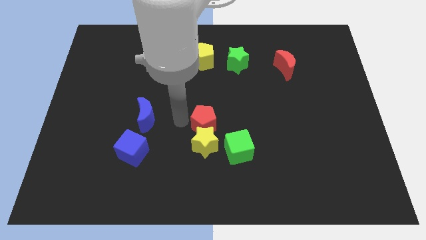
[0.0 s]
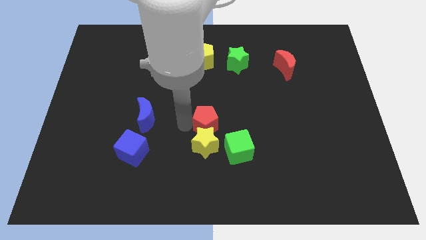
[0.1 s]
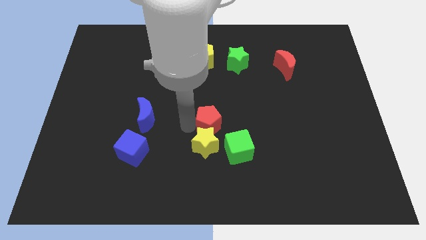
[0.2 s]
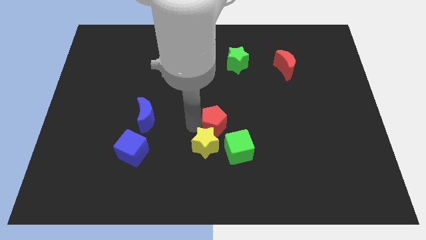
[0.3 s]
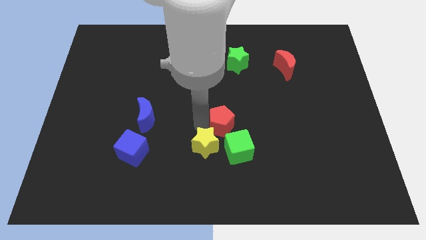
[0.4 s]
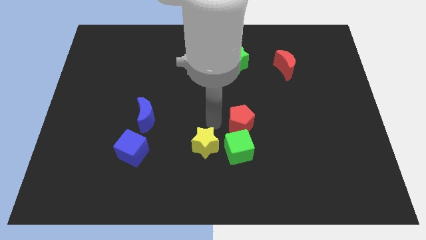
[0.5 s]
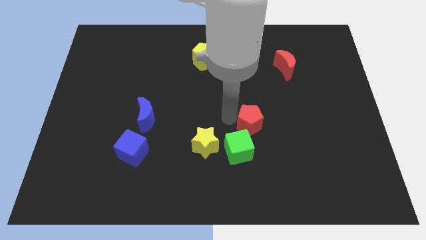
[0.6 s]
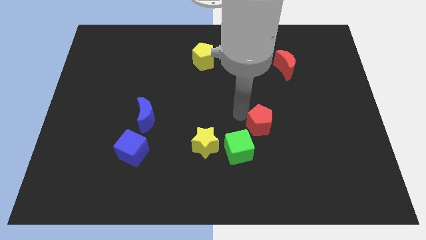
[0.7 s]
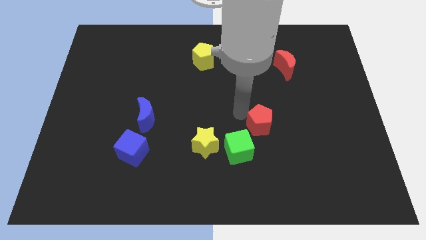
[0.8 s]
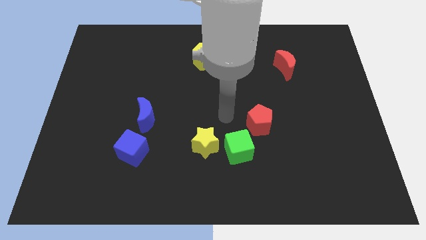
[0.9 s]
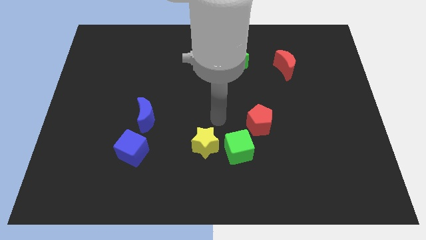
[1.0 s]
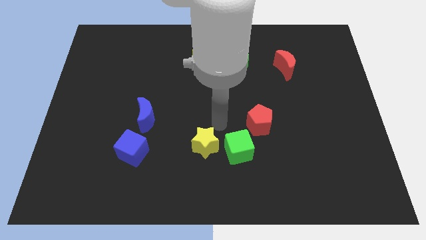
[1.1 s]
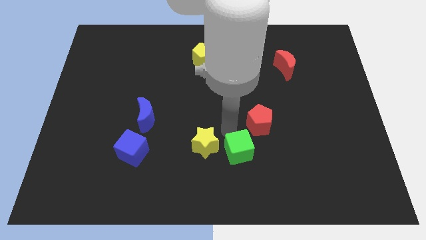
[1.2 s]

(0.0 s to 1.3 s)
push the red pentagon to the top right of the green cube

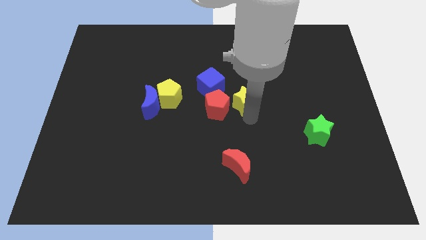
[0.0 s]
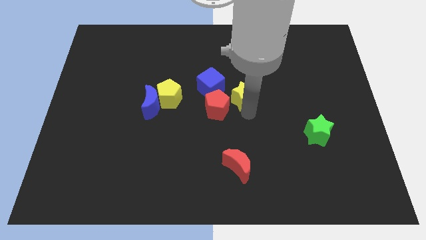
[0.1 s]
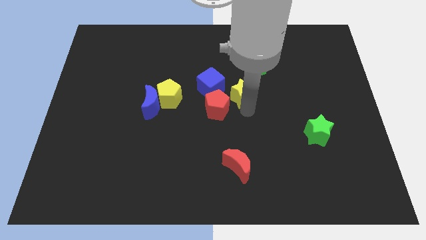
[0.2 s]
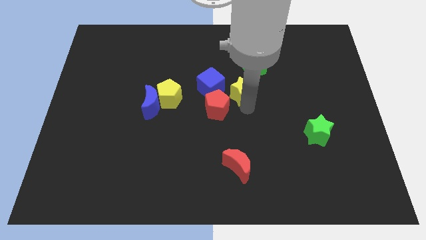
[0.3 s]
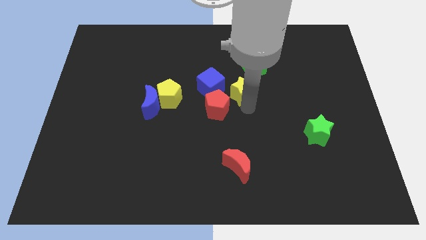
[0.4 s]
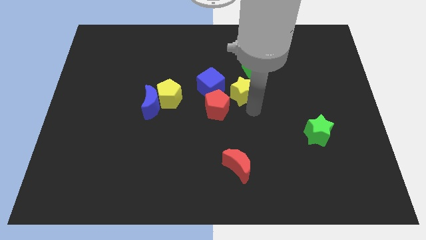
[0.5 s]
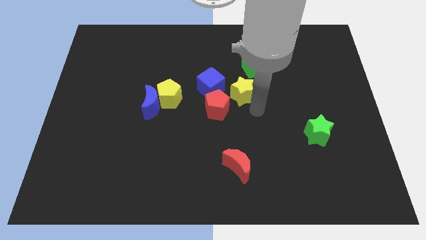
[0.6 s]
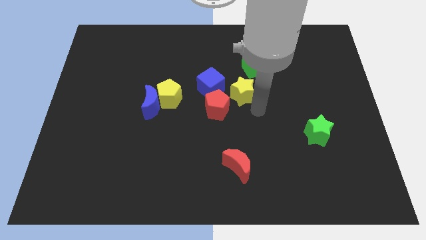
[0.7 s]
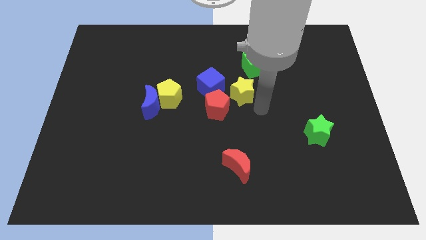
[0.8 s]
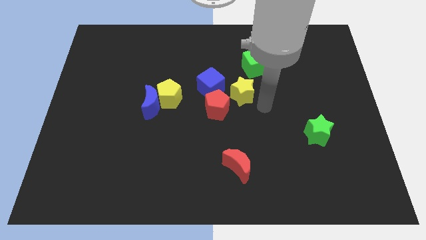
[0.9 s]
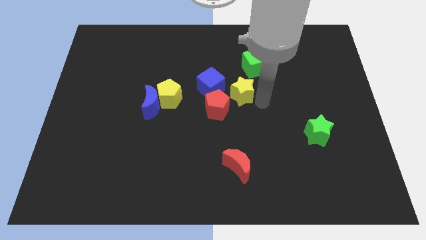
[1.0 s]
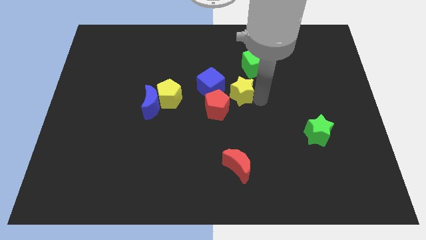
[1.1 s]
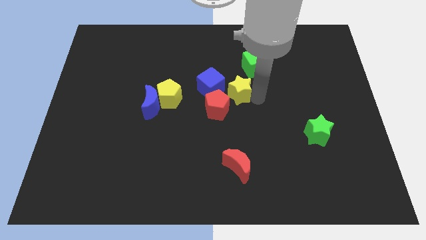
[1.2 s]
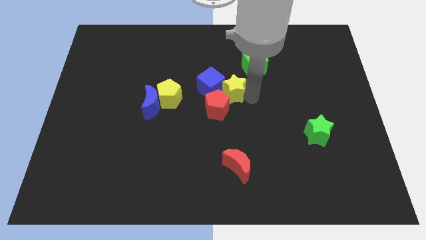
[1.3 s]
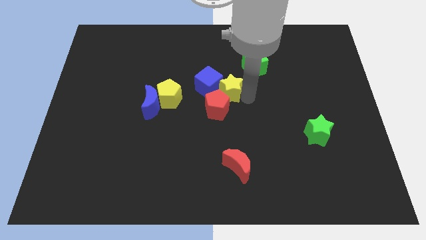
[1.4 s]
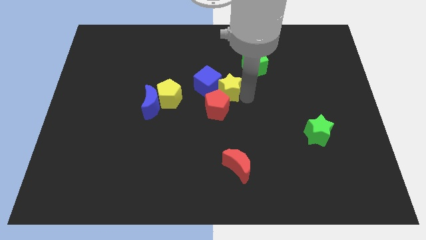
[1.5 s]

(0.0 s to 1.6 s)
slide the yellow star into the right side of the blue cube

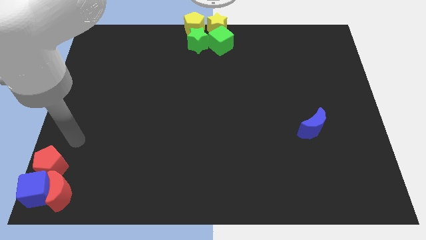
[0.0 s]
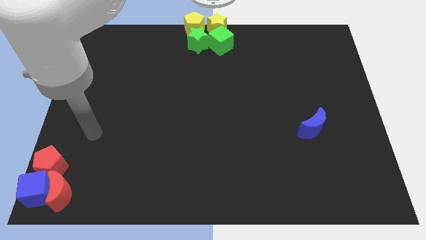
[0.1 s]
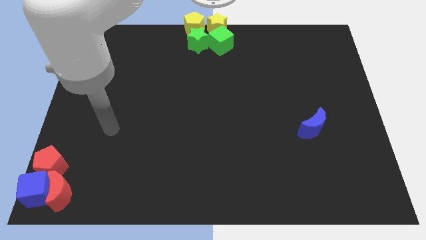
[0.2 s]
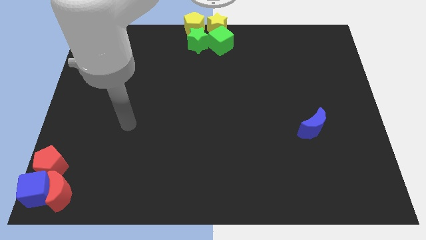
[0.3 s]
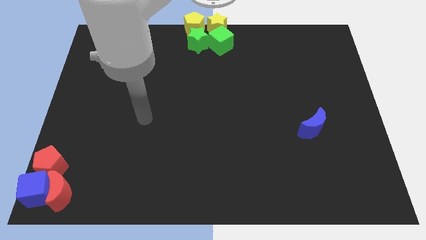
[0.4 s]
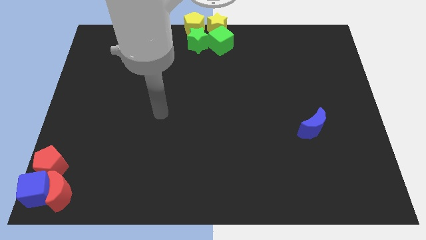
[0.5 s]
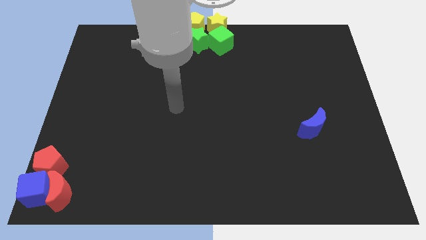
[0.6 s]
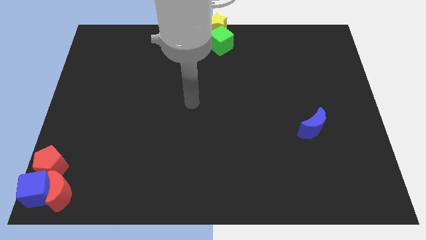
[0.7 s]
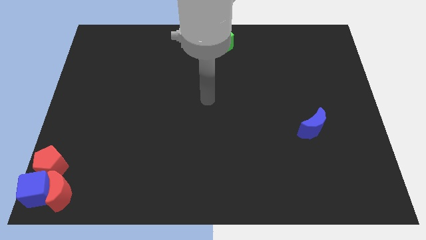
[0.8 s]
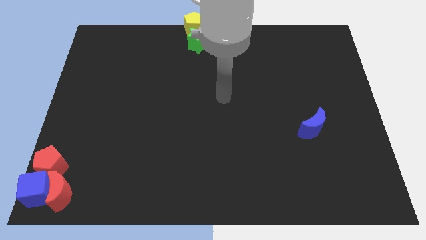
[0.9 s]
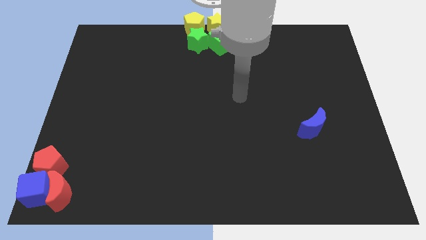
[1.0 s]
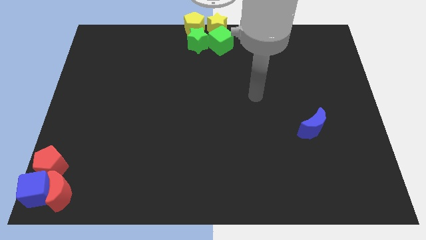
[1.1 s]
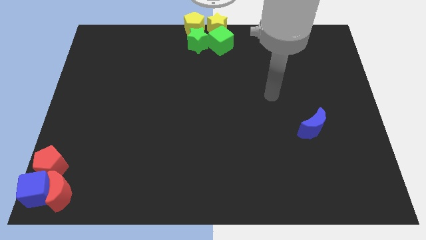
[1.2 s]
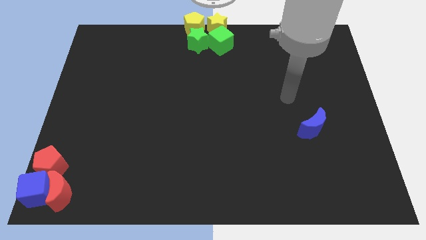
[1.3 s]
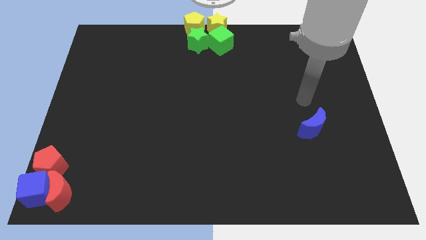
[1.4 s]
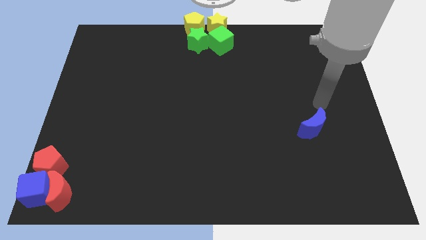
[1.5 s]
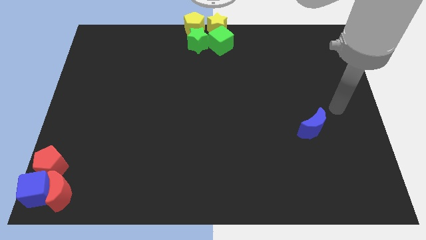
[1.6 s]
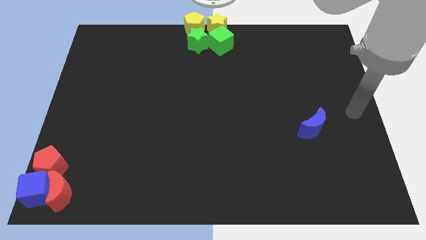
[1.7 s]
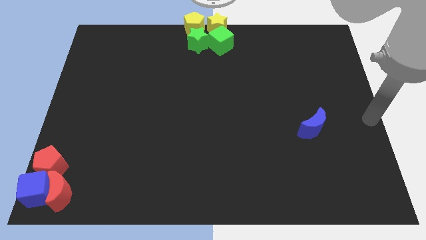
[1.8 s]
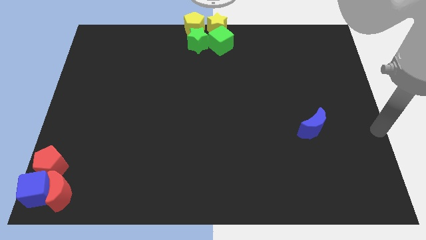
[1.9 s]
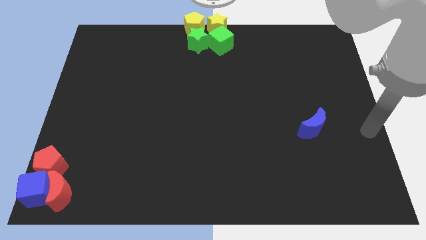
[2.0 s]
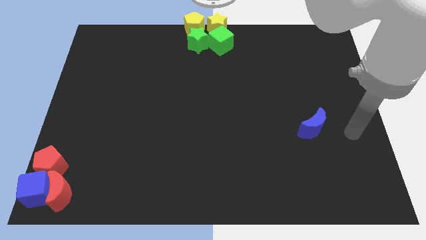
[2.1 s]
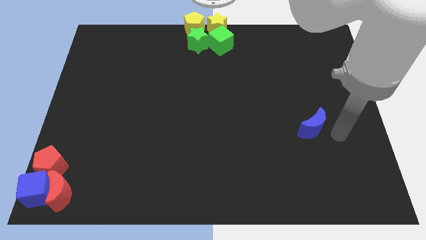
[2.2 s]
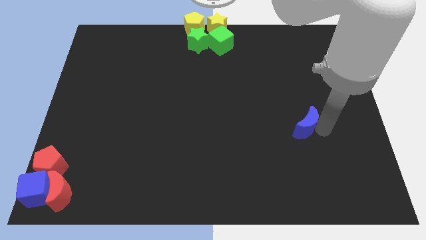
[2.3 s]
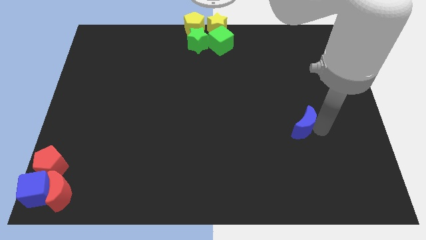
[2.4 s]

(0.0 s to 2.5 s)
slightly push blue crescent towards the left of the board

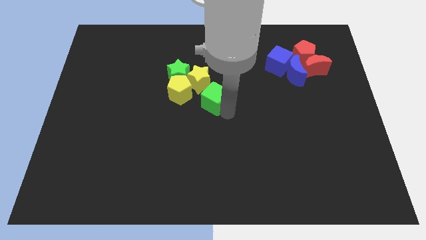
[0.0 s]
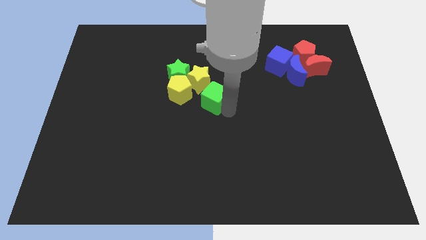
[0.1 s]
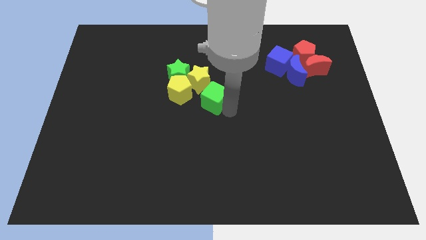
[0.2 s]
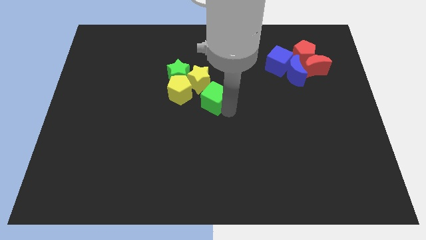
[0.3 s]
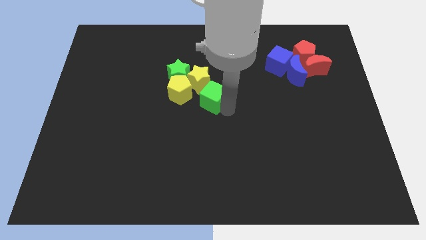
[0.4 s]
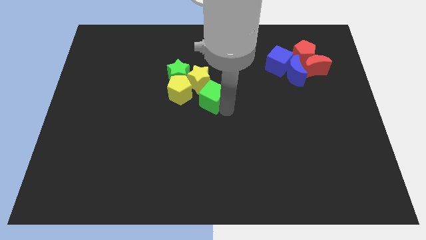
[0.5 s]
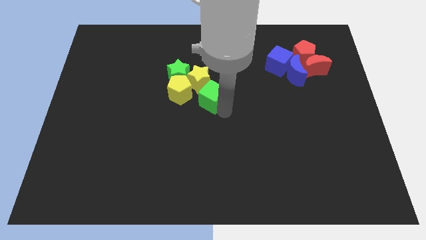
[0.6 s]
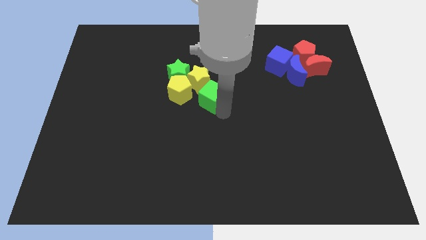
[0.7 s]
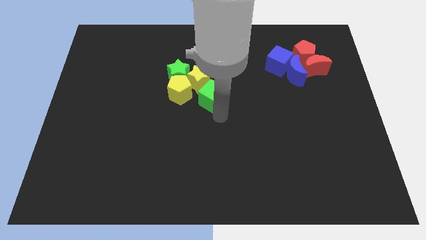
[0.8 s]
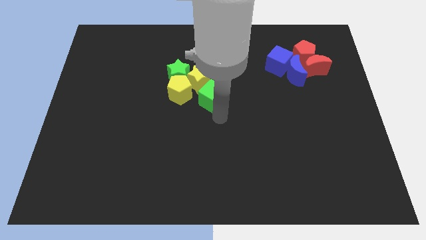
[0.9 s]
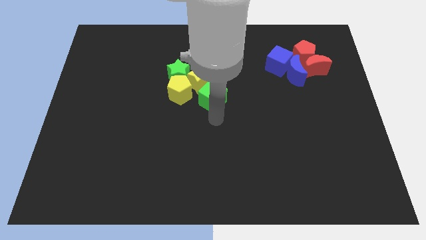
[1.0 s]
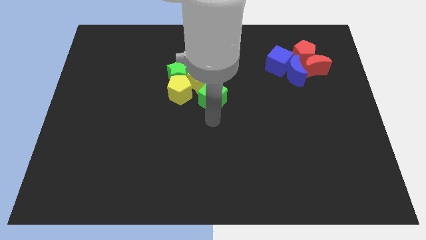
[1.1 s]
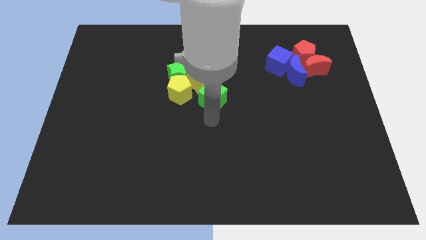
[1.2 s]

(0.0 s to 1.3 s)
move green cube into yellow star

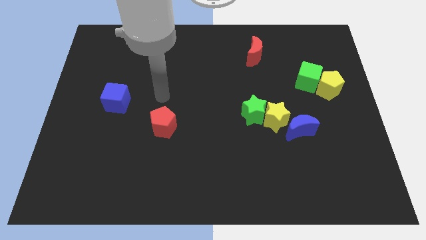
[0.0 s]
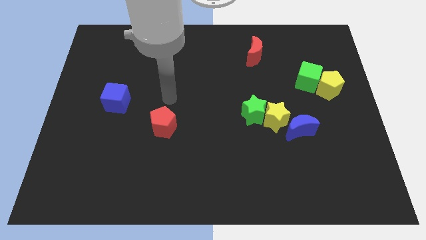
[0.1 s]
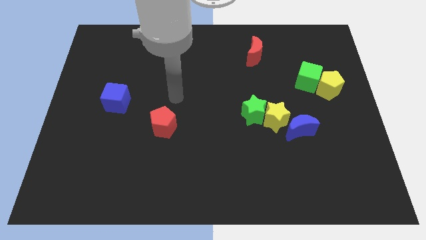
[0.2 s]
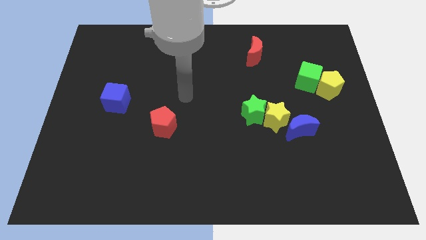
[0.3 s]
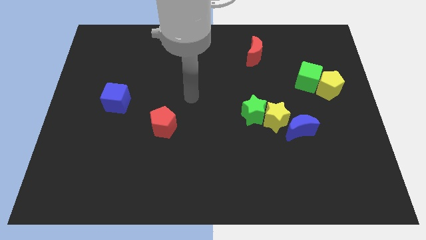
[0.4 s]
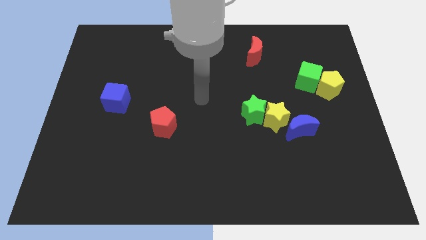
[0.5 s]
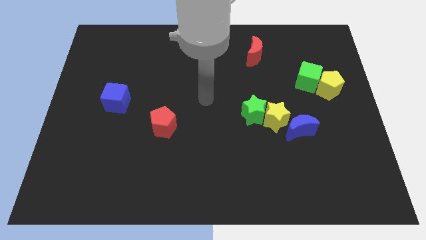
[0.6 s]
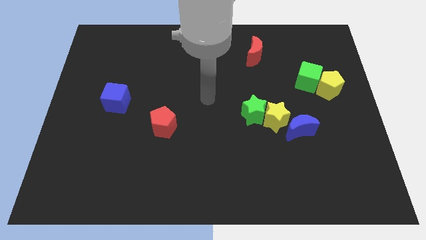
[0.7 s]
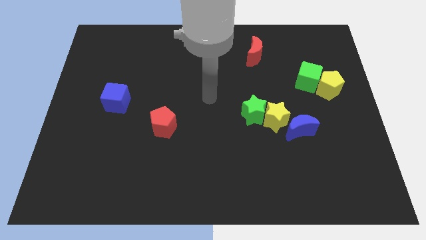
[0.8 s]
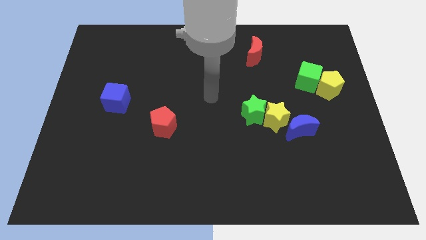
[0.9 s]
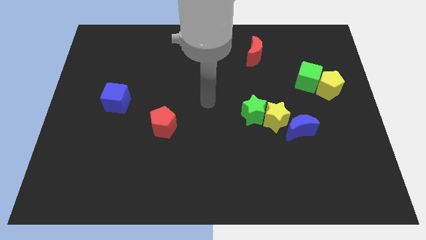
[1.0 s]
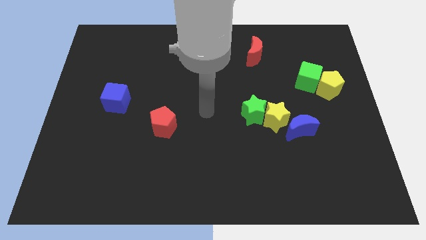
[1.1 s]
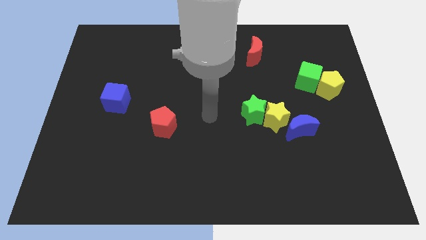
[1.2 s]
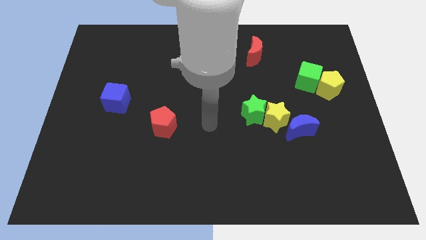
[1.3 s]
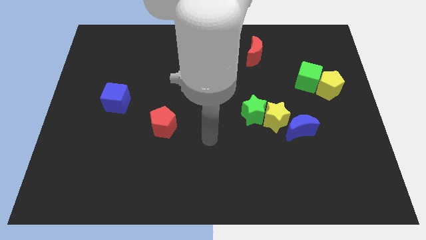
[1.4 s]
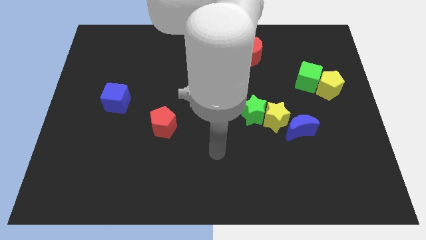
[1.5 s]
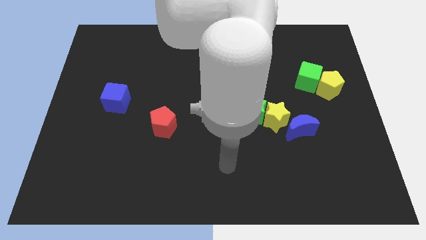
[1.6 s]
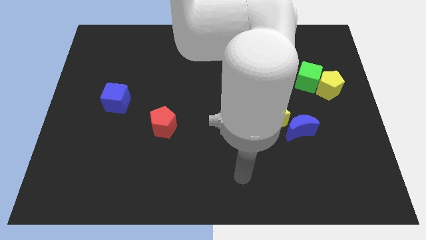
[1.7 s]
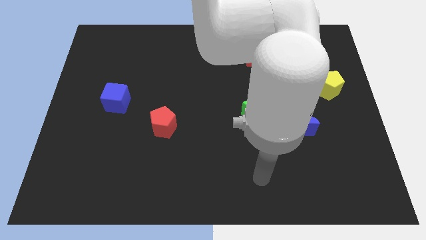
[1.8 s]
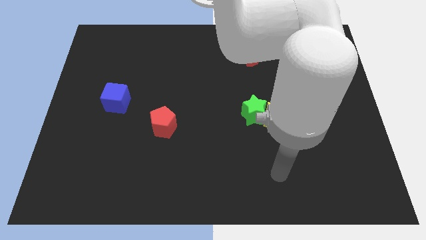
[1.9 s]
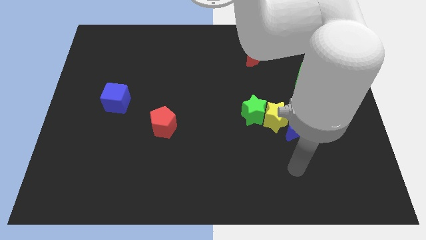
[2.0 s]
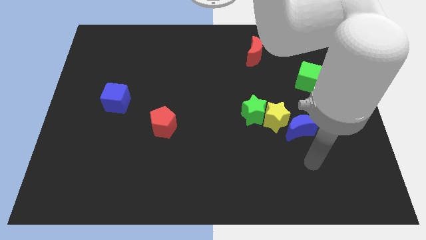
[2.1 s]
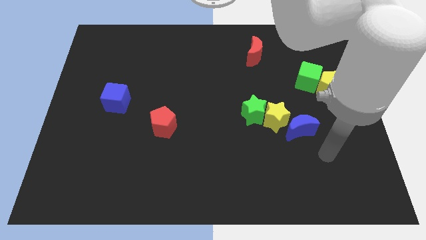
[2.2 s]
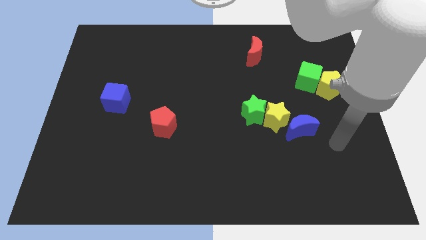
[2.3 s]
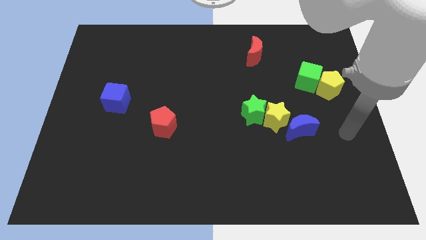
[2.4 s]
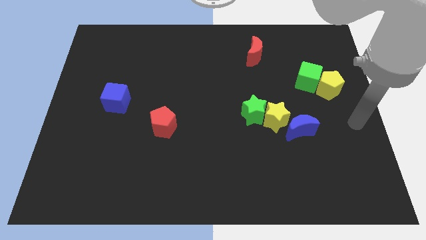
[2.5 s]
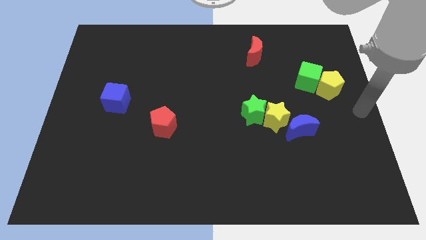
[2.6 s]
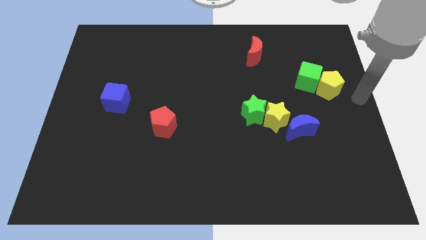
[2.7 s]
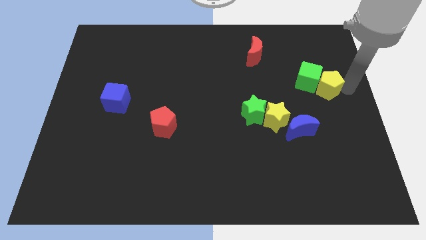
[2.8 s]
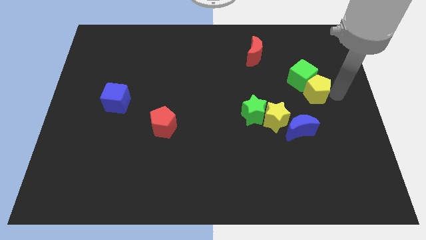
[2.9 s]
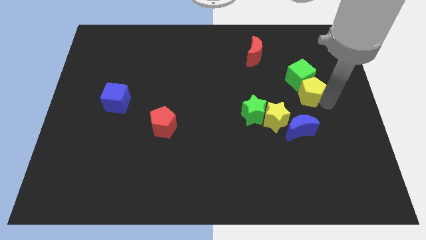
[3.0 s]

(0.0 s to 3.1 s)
go and push the yellow pentagon towards the left side
